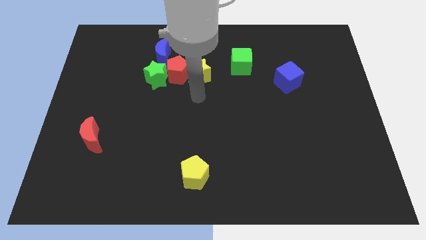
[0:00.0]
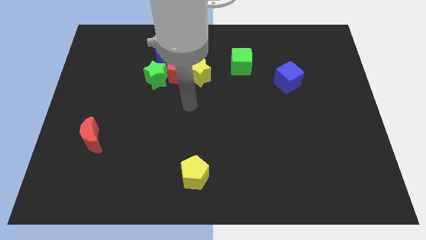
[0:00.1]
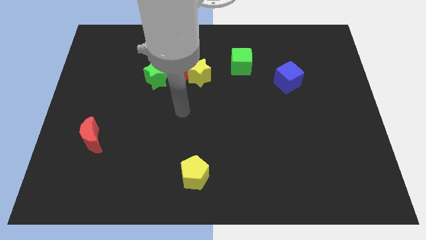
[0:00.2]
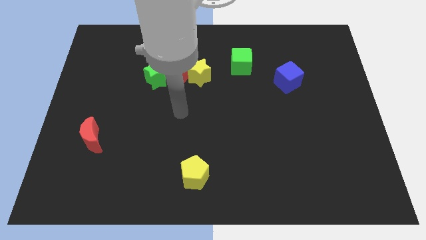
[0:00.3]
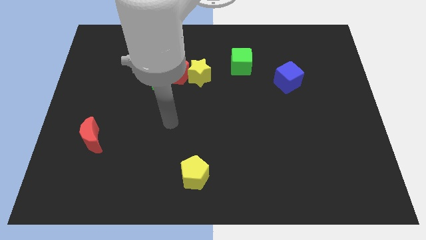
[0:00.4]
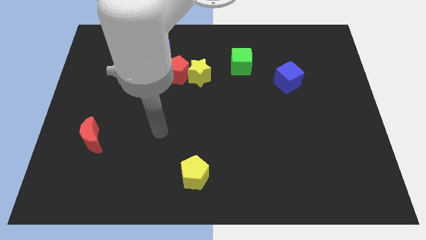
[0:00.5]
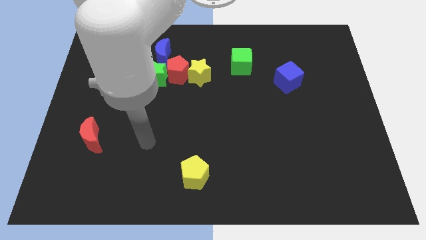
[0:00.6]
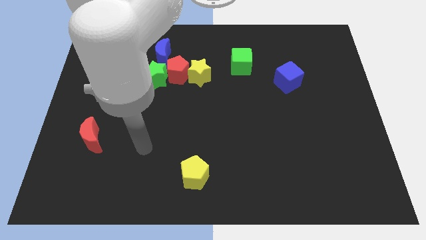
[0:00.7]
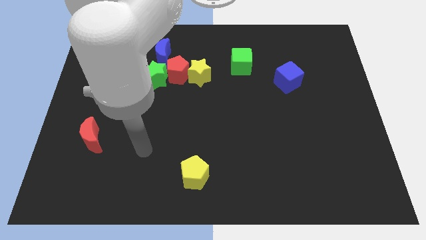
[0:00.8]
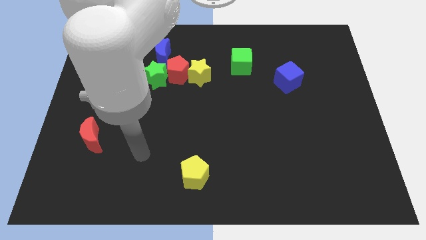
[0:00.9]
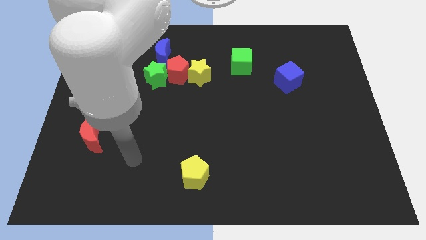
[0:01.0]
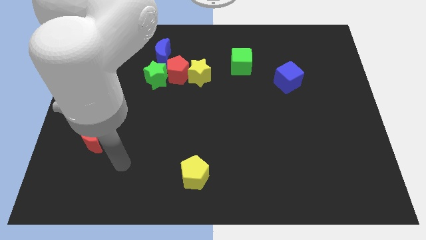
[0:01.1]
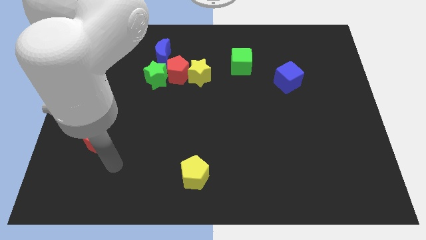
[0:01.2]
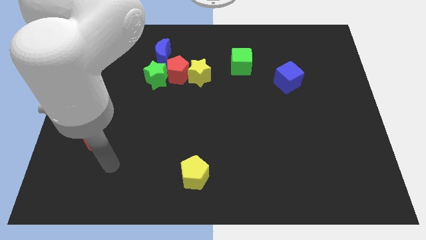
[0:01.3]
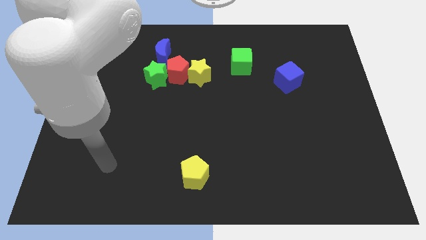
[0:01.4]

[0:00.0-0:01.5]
point your arm below red moon

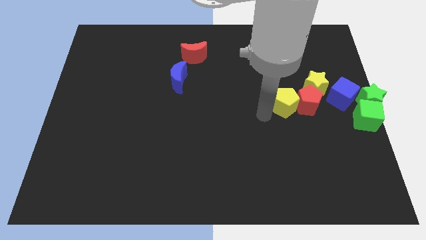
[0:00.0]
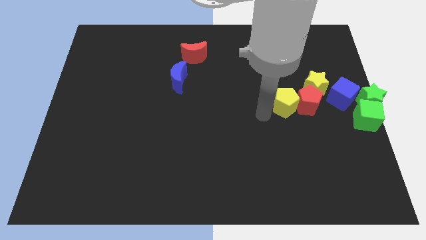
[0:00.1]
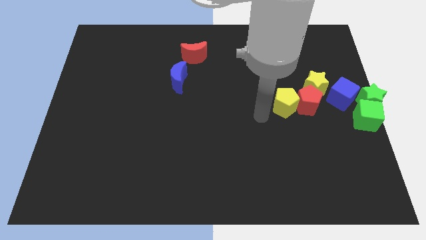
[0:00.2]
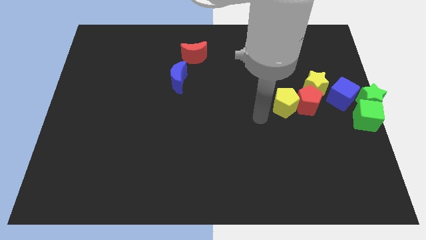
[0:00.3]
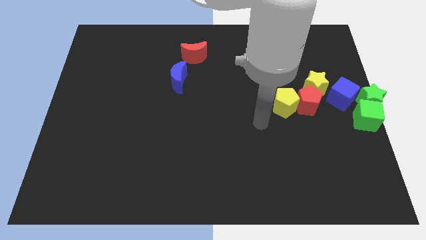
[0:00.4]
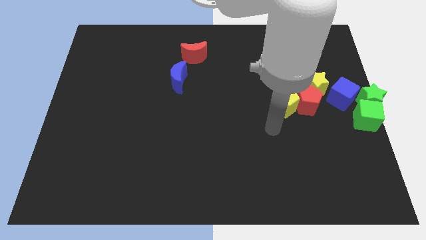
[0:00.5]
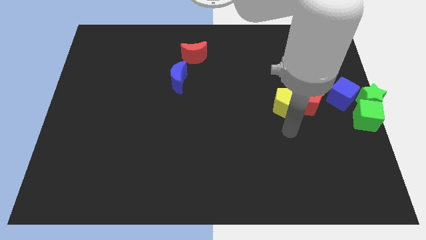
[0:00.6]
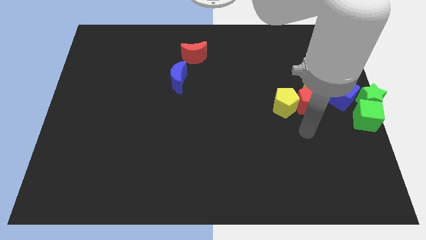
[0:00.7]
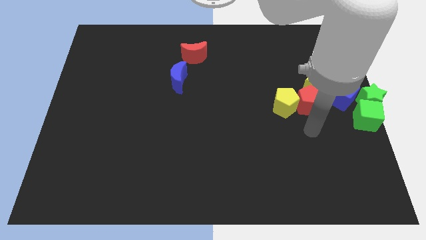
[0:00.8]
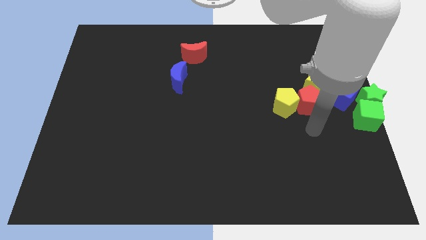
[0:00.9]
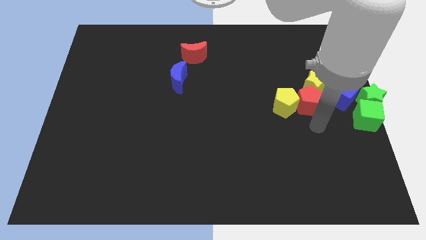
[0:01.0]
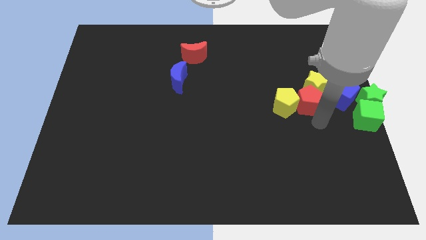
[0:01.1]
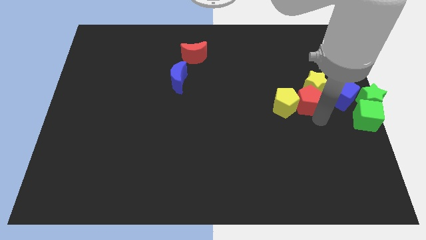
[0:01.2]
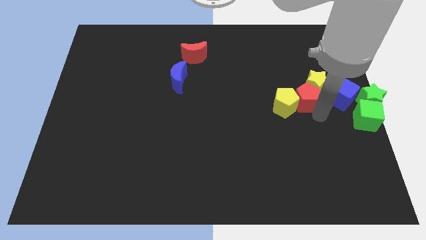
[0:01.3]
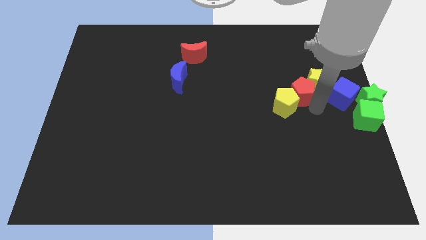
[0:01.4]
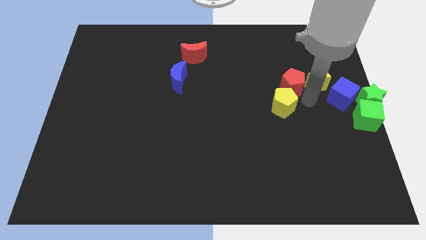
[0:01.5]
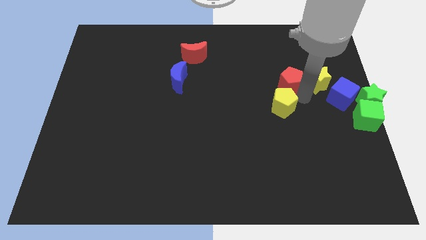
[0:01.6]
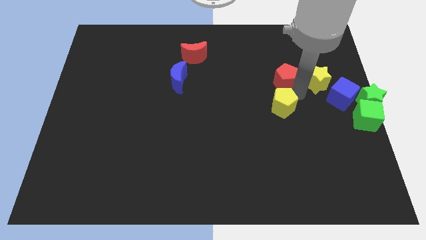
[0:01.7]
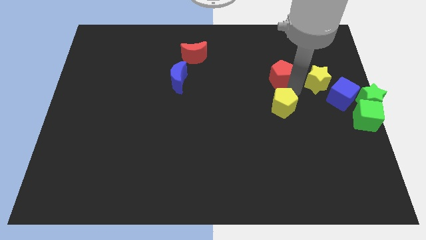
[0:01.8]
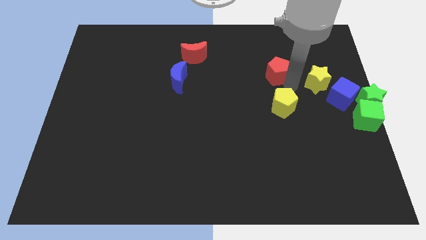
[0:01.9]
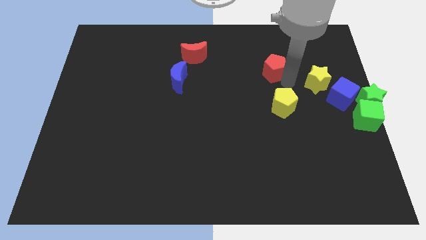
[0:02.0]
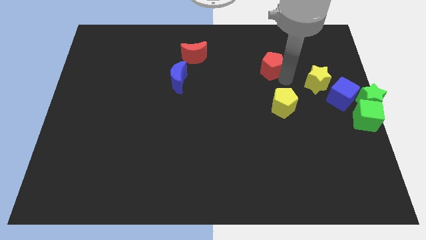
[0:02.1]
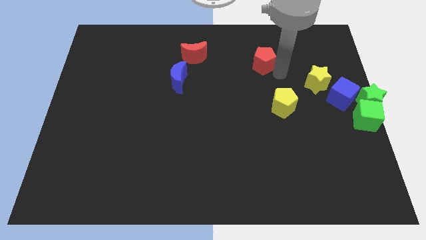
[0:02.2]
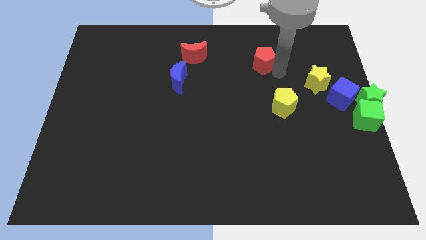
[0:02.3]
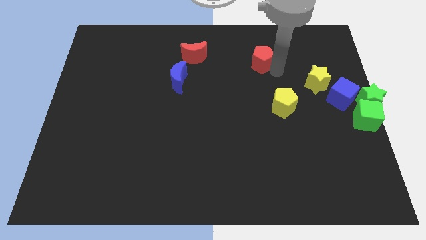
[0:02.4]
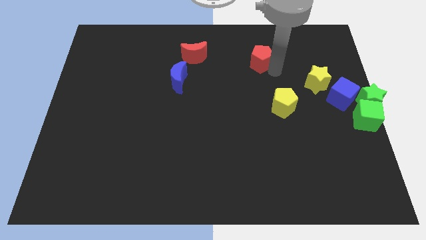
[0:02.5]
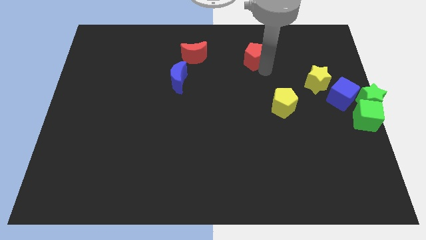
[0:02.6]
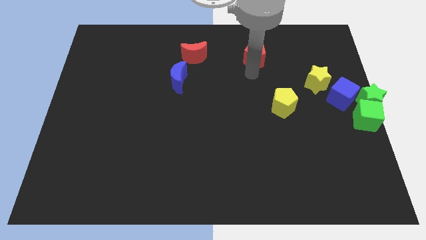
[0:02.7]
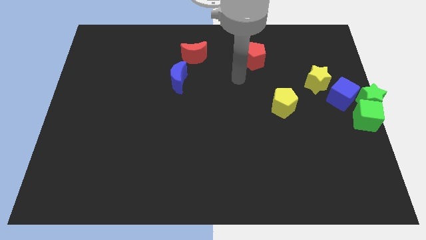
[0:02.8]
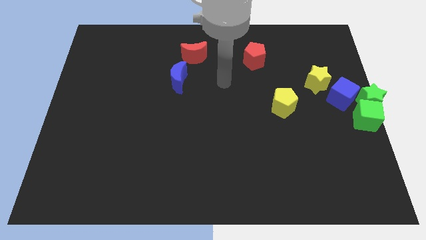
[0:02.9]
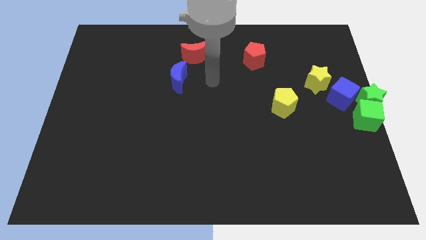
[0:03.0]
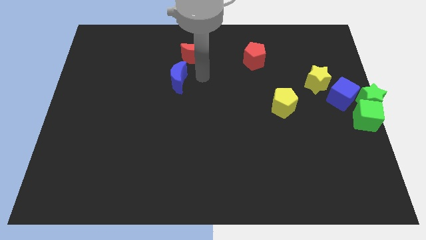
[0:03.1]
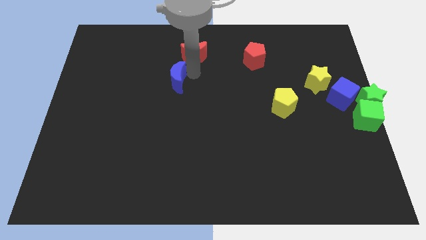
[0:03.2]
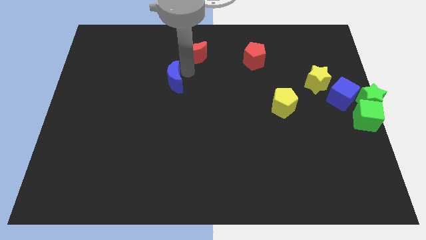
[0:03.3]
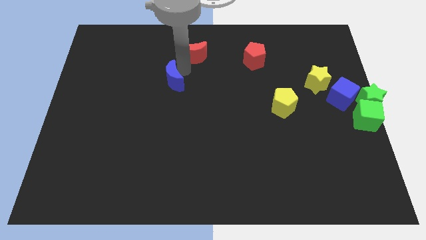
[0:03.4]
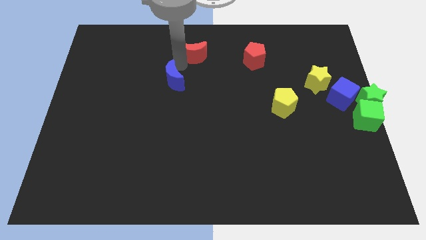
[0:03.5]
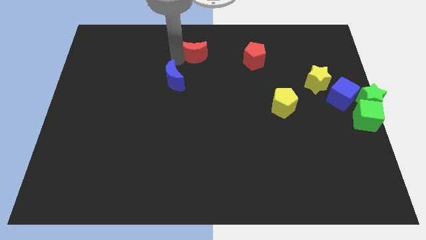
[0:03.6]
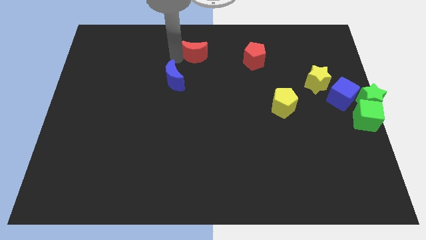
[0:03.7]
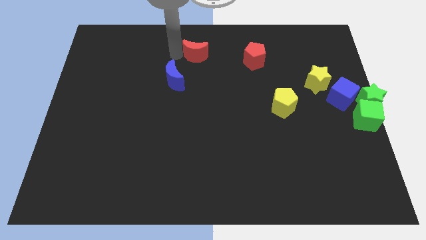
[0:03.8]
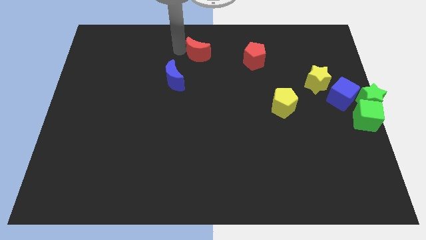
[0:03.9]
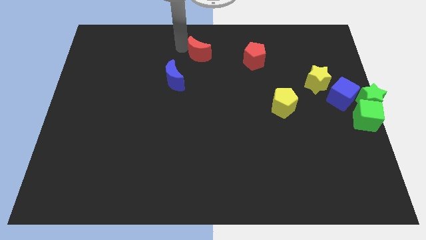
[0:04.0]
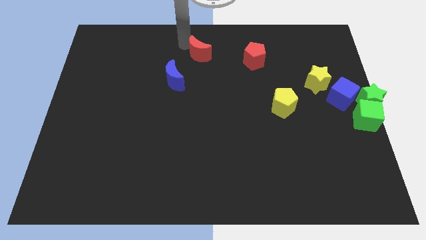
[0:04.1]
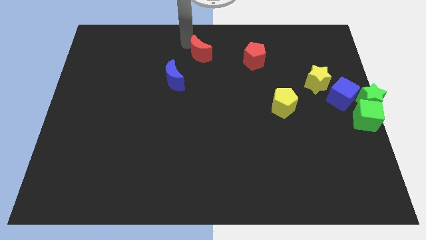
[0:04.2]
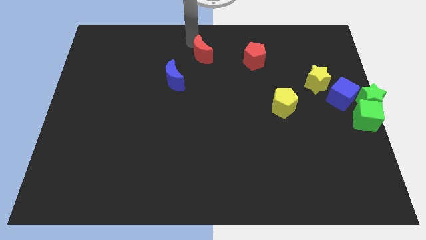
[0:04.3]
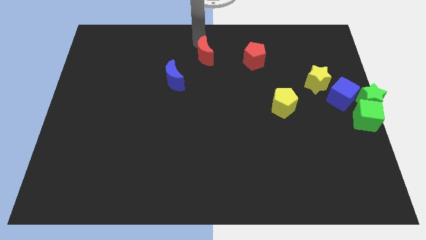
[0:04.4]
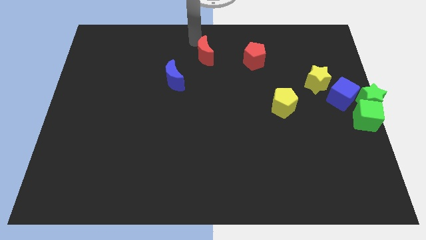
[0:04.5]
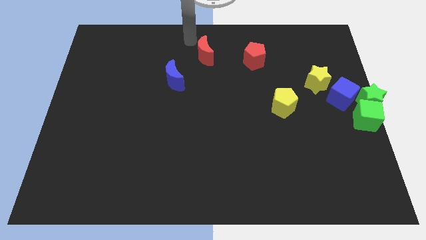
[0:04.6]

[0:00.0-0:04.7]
place the red pentagon to the right of the red moon

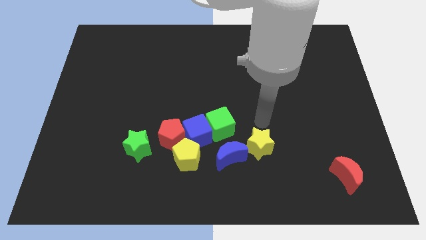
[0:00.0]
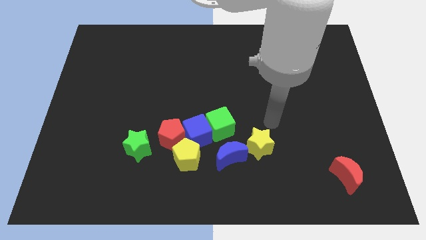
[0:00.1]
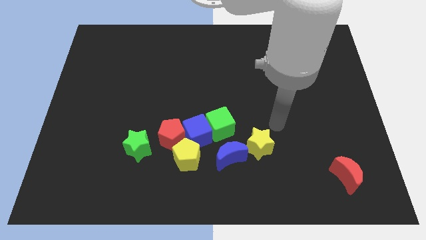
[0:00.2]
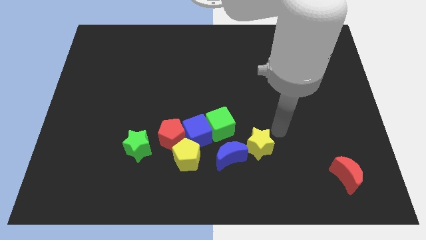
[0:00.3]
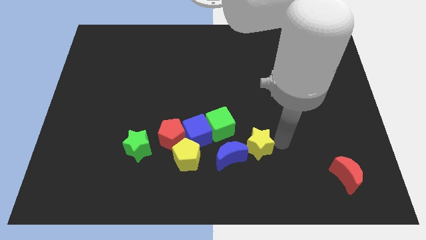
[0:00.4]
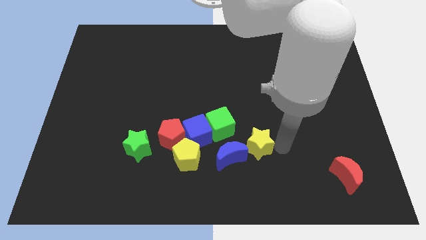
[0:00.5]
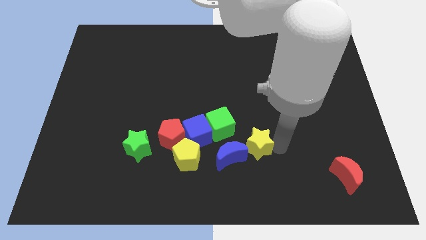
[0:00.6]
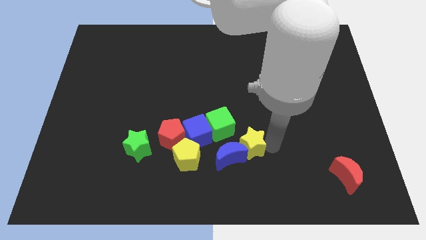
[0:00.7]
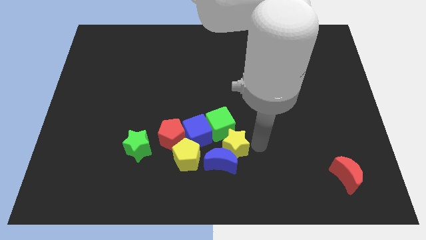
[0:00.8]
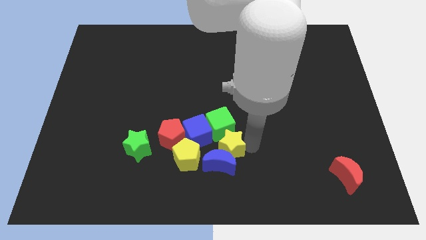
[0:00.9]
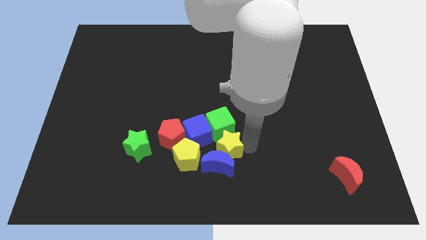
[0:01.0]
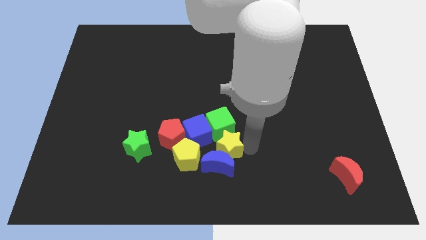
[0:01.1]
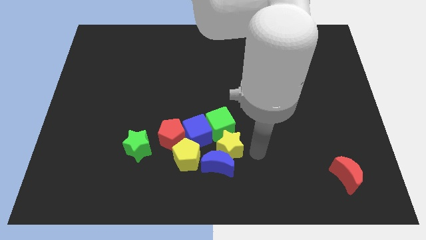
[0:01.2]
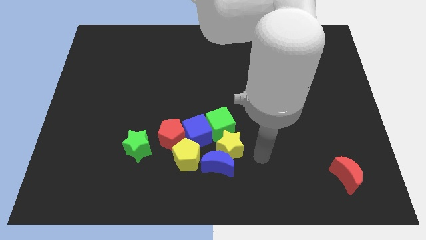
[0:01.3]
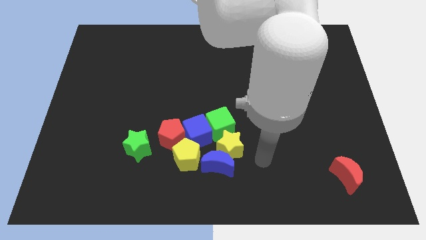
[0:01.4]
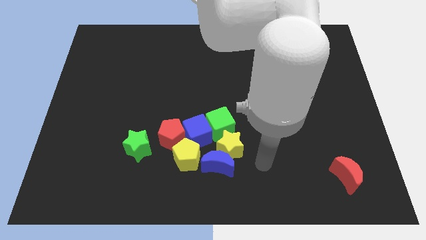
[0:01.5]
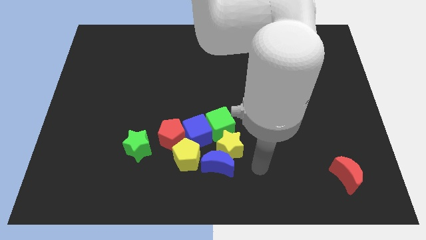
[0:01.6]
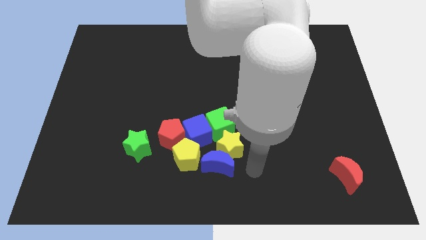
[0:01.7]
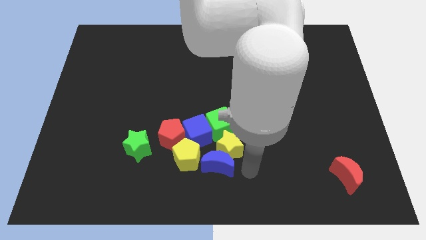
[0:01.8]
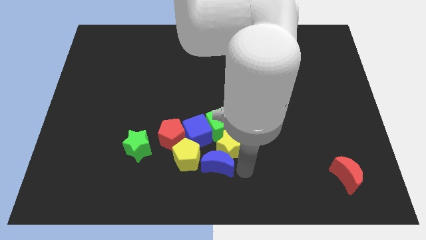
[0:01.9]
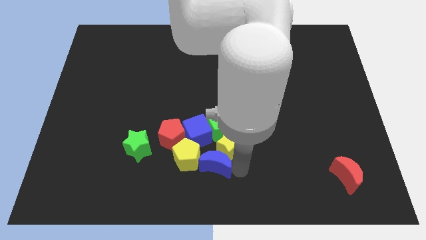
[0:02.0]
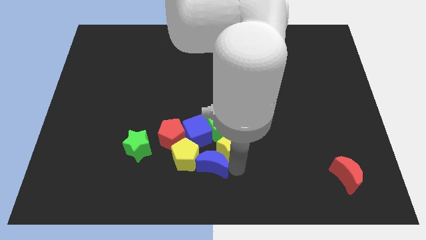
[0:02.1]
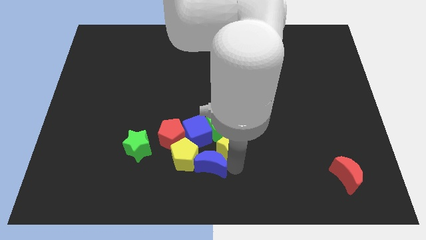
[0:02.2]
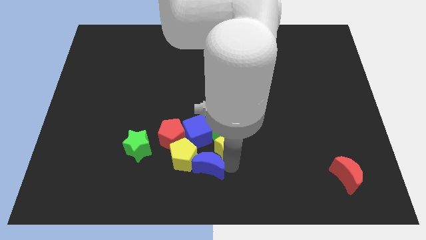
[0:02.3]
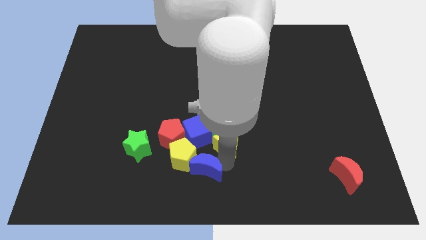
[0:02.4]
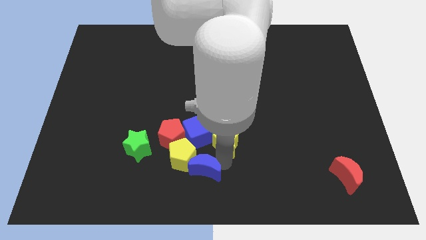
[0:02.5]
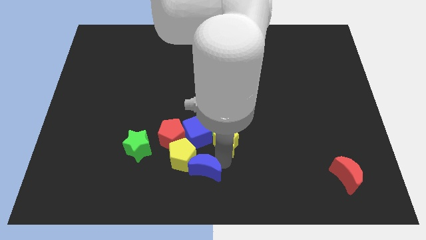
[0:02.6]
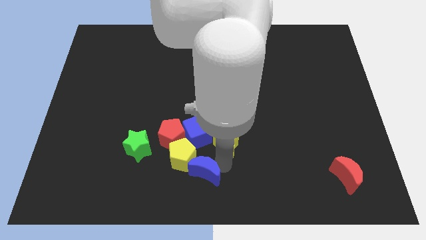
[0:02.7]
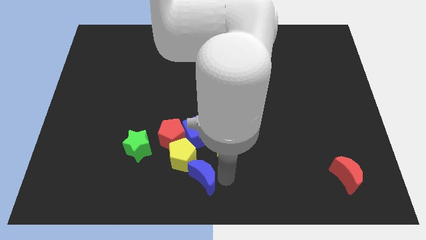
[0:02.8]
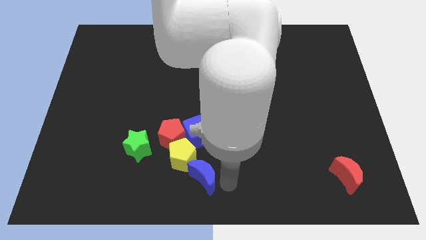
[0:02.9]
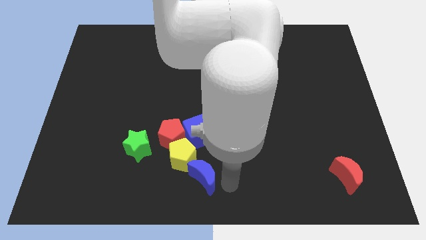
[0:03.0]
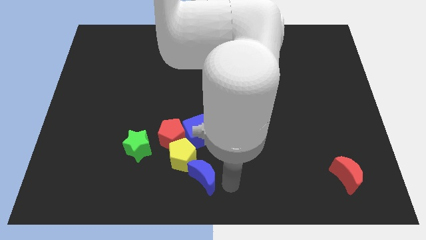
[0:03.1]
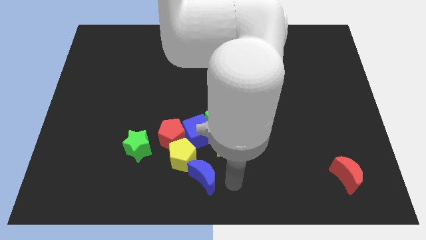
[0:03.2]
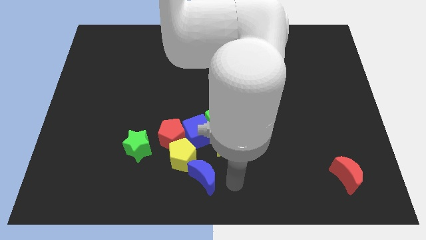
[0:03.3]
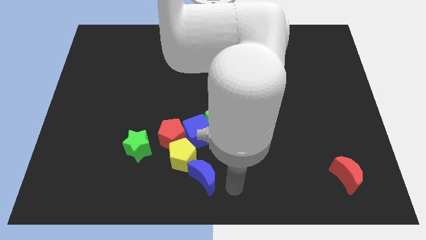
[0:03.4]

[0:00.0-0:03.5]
push the yellow star into the green cube
